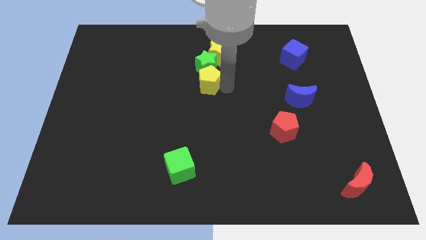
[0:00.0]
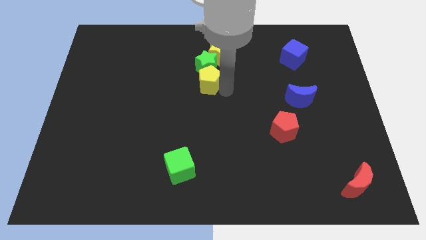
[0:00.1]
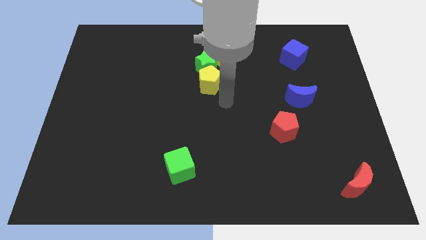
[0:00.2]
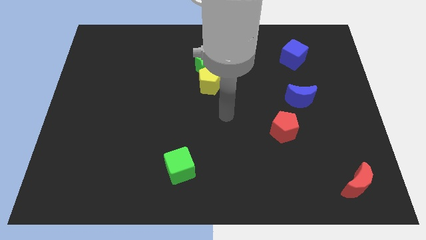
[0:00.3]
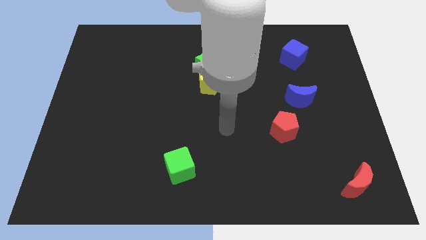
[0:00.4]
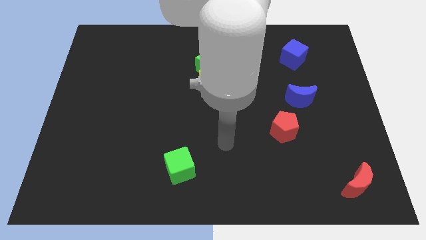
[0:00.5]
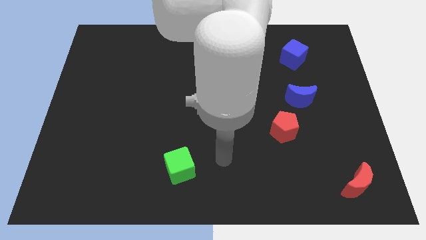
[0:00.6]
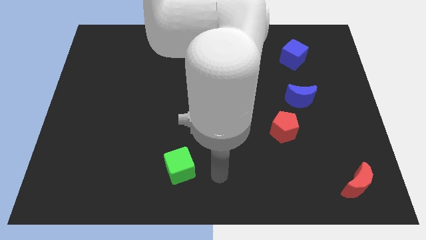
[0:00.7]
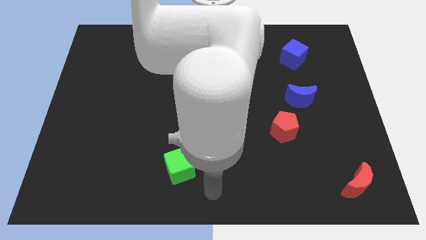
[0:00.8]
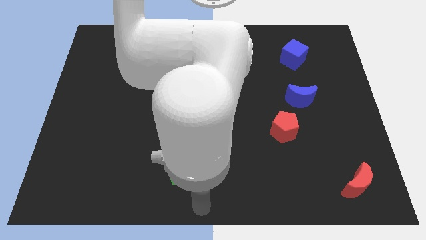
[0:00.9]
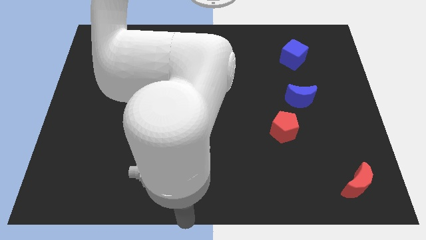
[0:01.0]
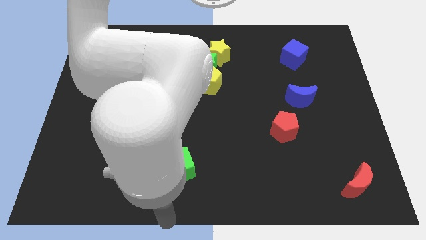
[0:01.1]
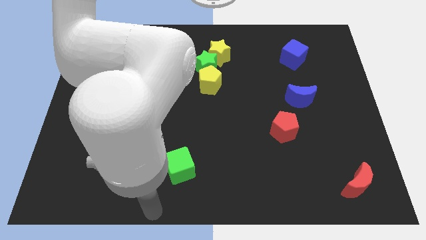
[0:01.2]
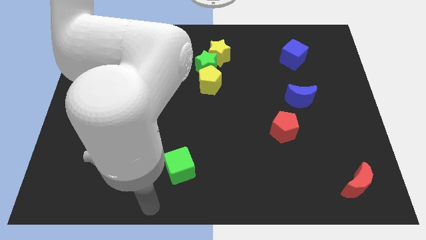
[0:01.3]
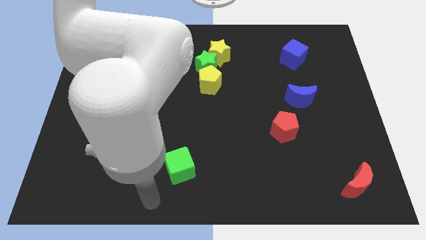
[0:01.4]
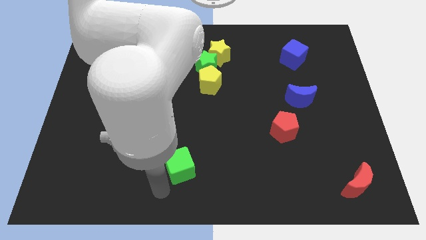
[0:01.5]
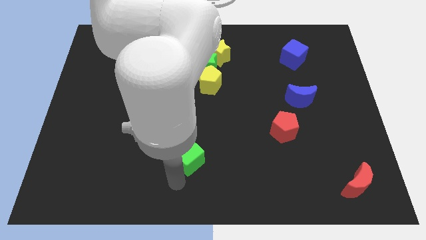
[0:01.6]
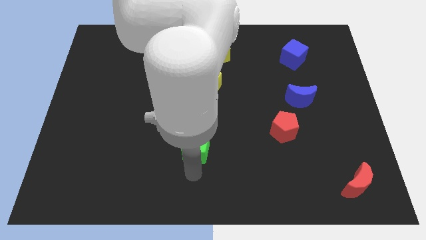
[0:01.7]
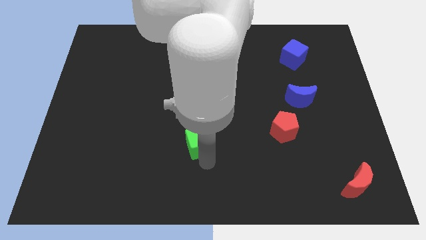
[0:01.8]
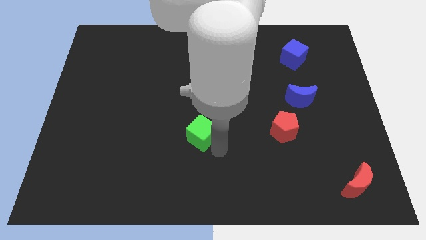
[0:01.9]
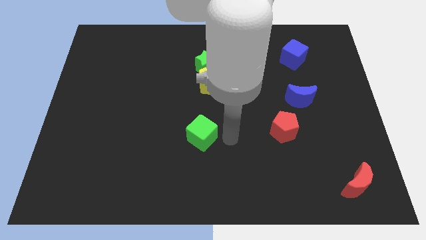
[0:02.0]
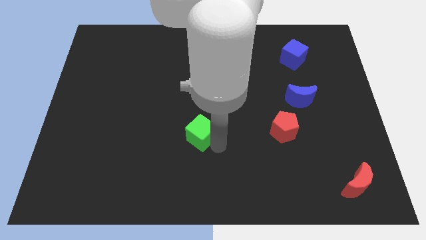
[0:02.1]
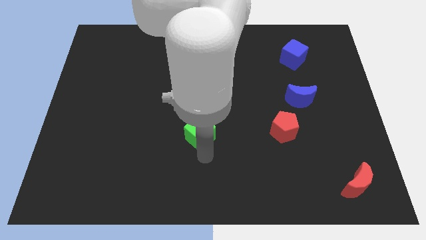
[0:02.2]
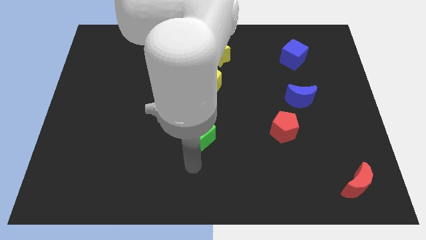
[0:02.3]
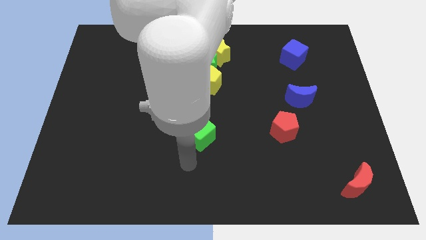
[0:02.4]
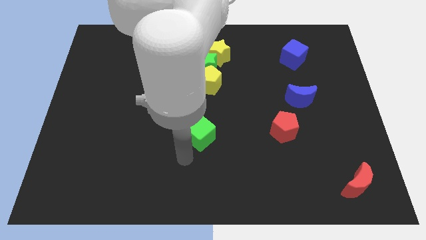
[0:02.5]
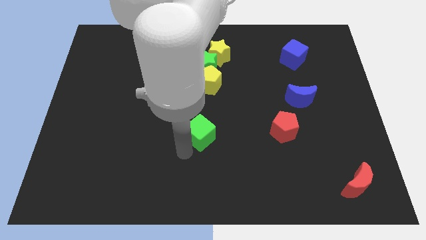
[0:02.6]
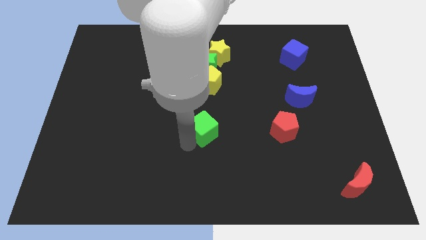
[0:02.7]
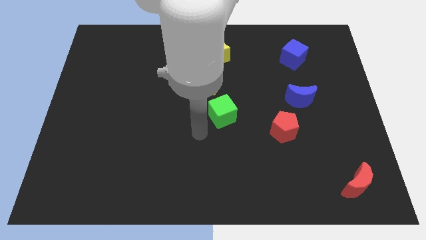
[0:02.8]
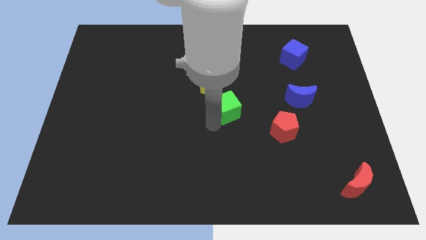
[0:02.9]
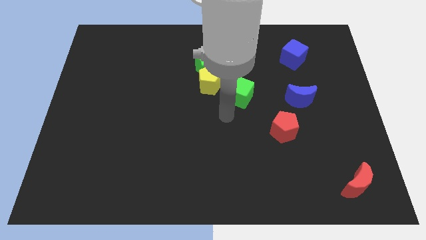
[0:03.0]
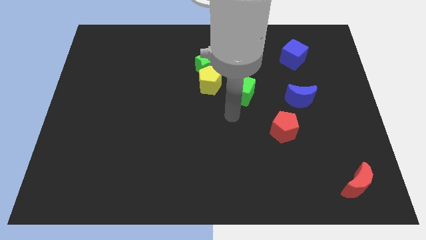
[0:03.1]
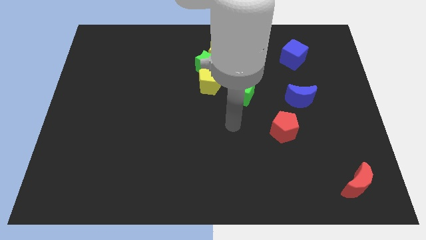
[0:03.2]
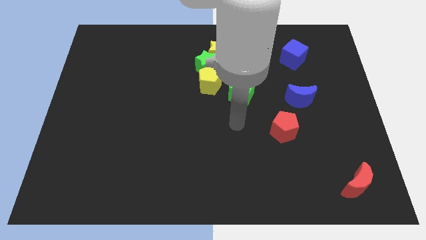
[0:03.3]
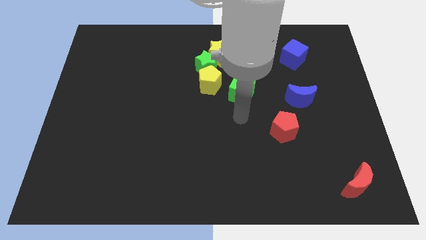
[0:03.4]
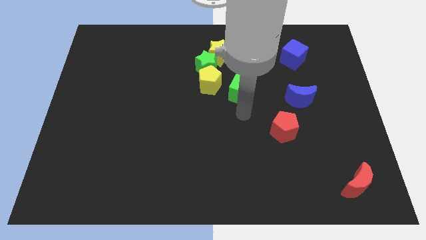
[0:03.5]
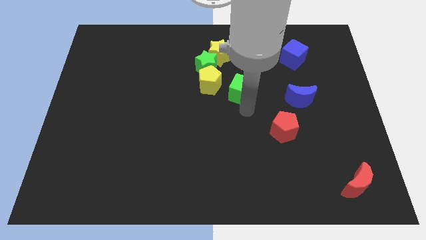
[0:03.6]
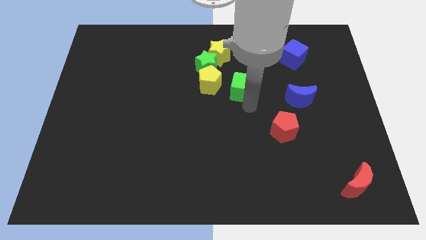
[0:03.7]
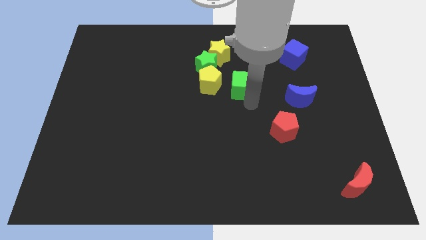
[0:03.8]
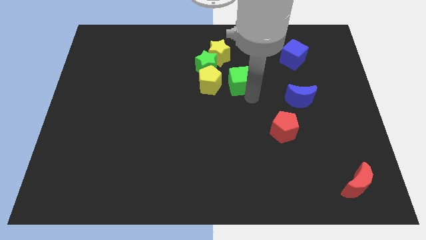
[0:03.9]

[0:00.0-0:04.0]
move the green cube parallel right to the yellow pentagon

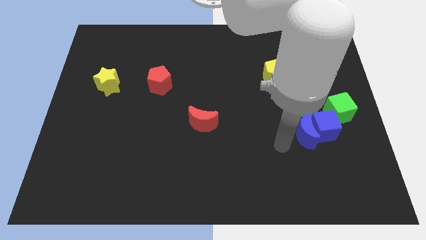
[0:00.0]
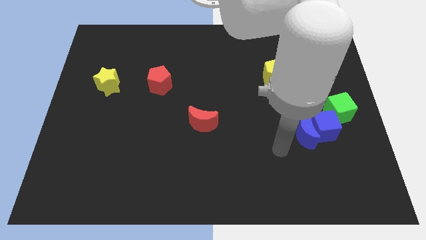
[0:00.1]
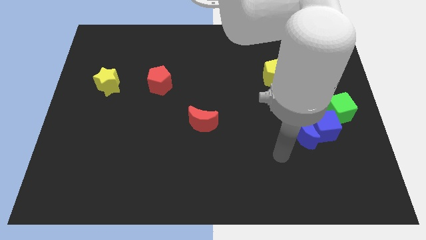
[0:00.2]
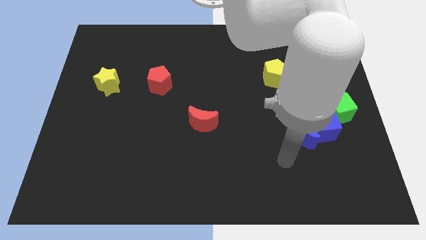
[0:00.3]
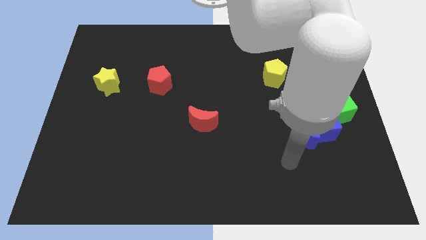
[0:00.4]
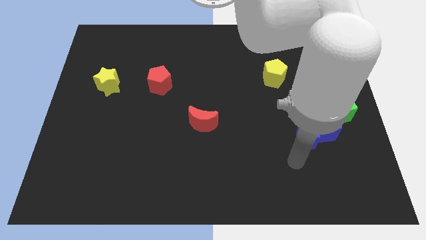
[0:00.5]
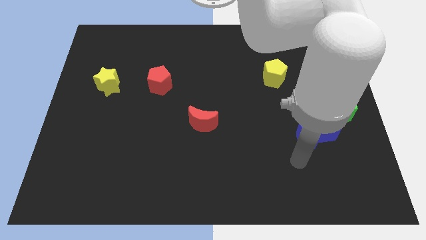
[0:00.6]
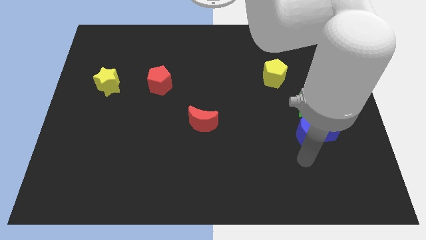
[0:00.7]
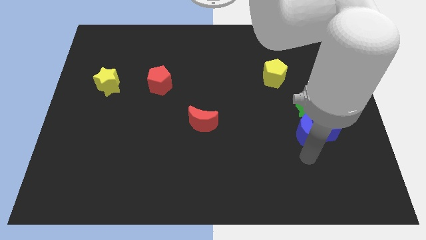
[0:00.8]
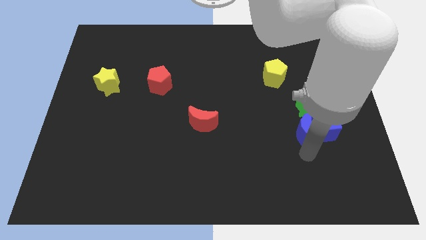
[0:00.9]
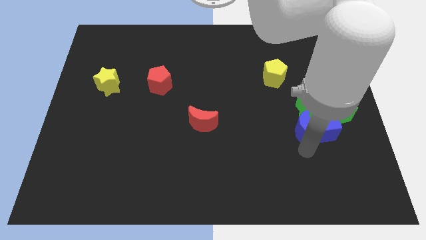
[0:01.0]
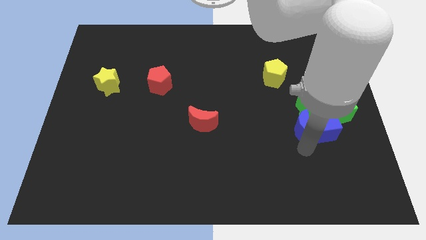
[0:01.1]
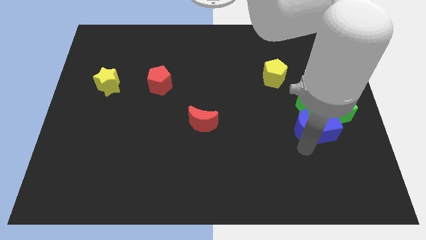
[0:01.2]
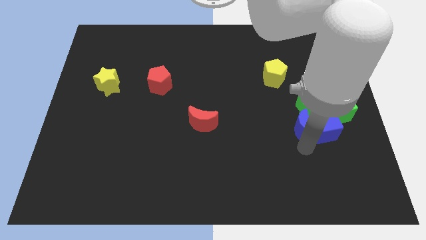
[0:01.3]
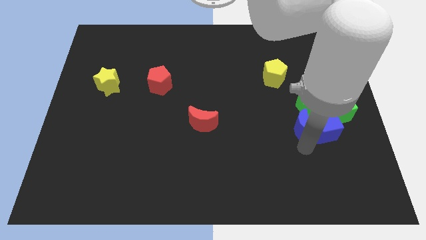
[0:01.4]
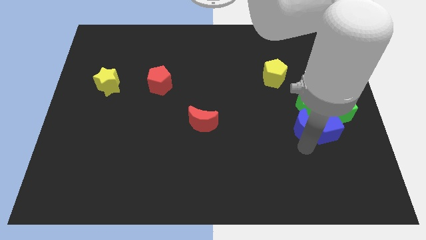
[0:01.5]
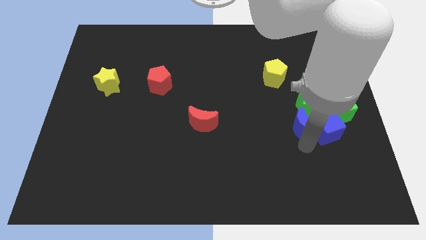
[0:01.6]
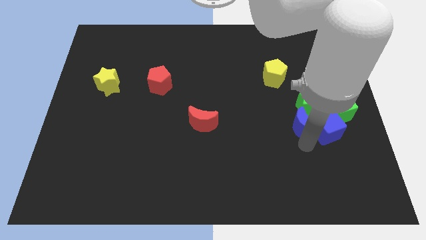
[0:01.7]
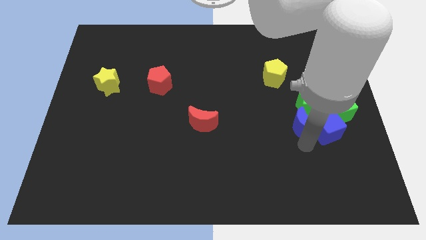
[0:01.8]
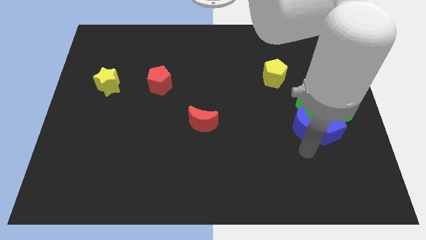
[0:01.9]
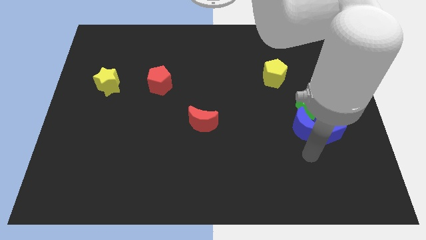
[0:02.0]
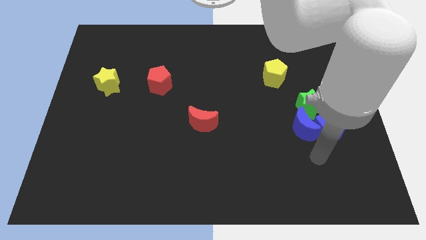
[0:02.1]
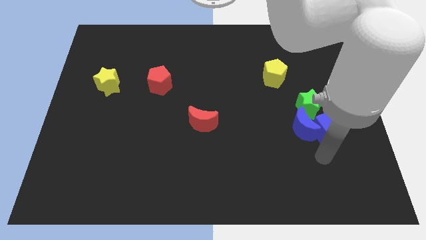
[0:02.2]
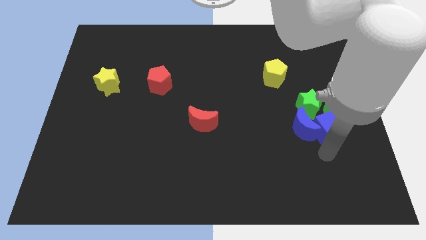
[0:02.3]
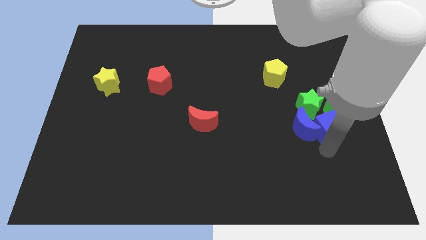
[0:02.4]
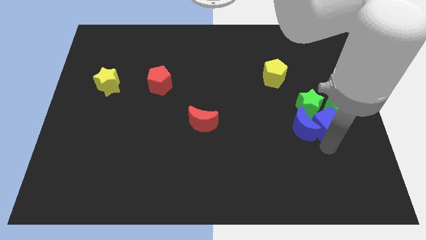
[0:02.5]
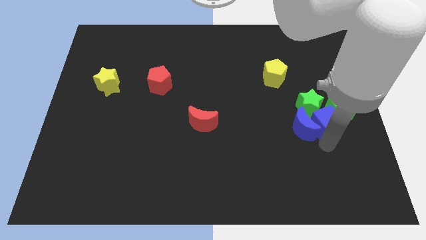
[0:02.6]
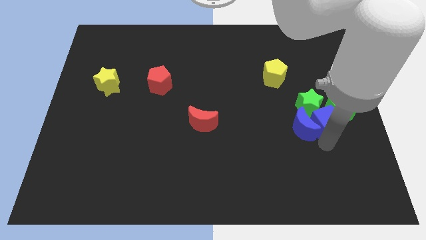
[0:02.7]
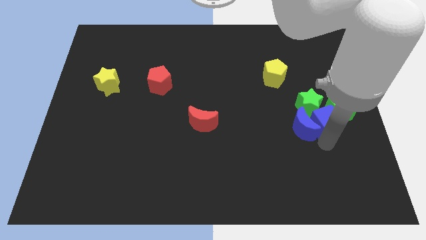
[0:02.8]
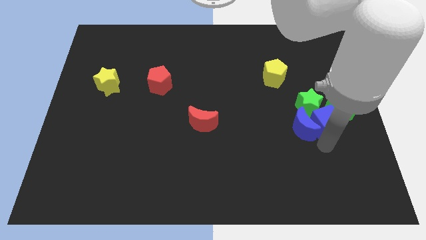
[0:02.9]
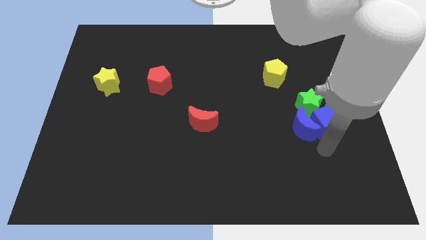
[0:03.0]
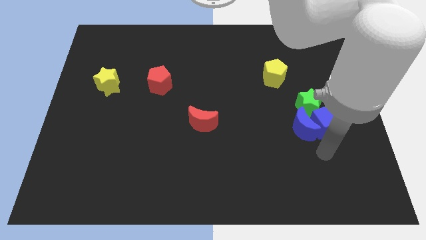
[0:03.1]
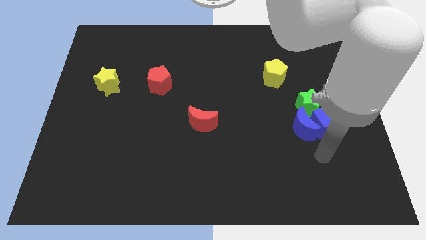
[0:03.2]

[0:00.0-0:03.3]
move the blue crescent and blue cube into the green blocks

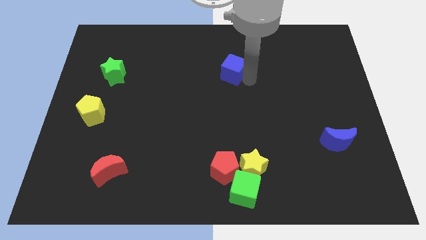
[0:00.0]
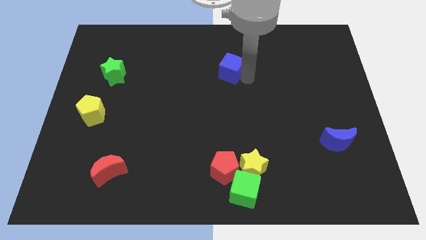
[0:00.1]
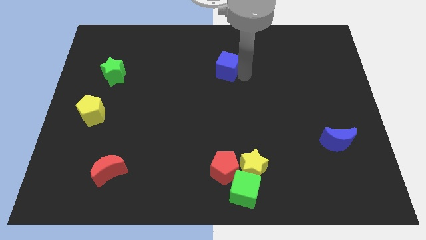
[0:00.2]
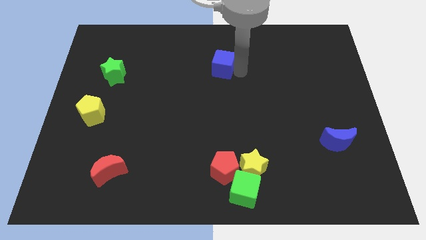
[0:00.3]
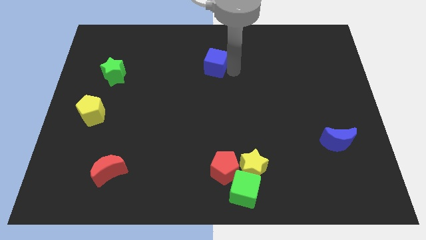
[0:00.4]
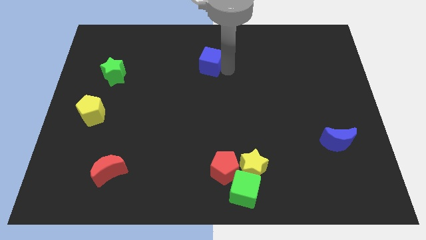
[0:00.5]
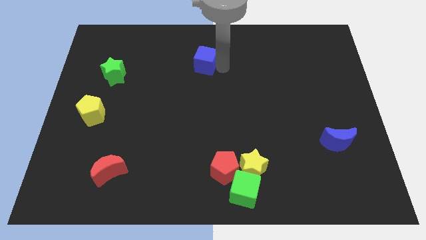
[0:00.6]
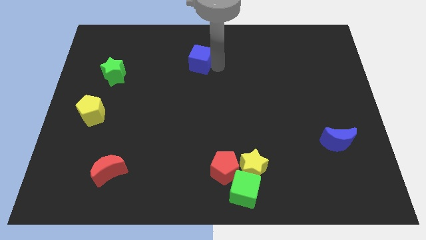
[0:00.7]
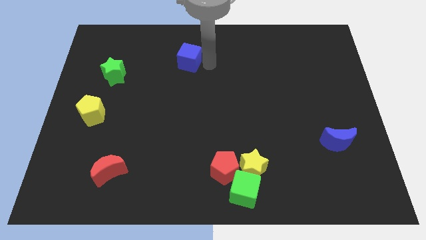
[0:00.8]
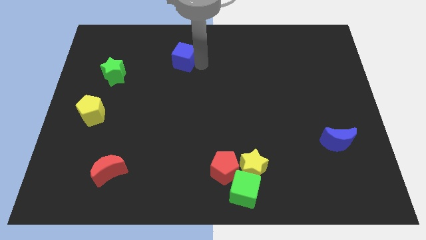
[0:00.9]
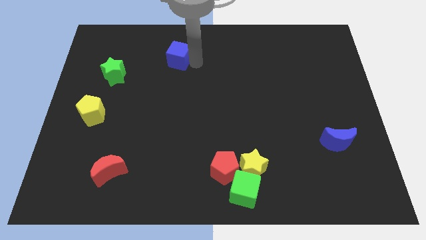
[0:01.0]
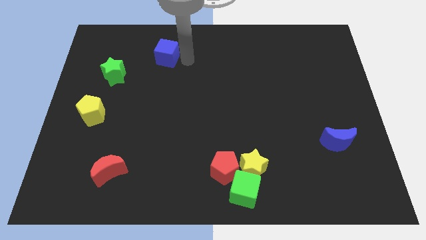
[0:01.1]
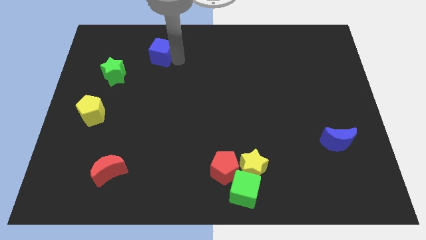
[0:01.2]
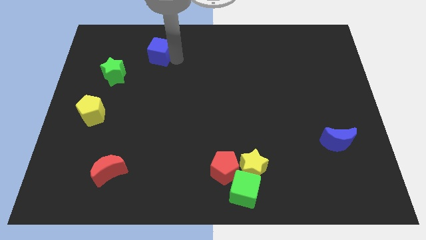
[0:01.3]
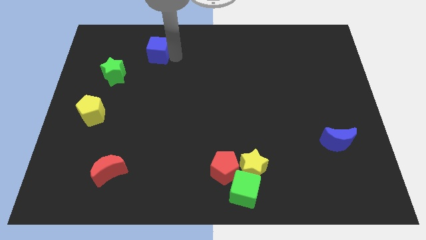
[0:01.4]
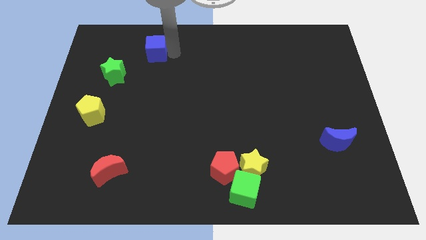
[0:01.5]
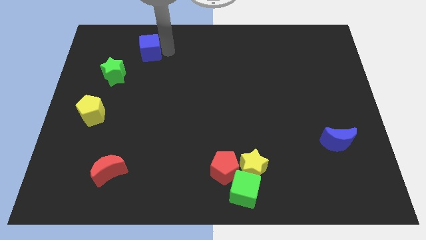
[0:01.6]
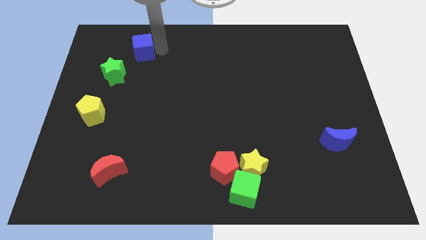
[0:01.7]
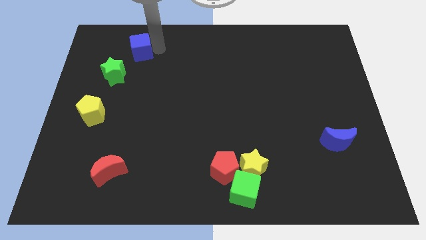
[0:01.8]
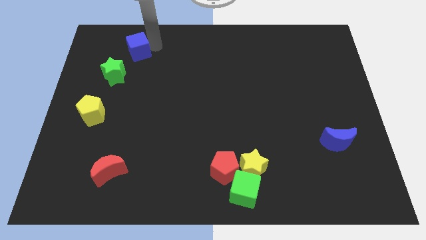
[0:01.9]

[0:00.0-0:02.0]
place the blue square at the top left side
